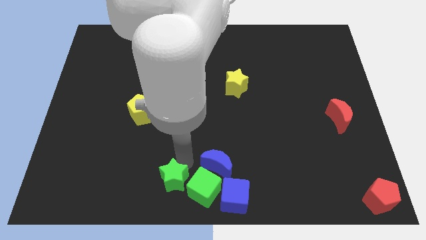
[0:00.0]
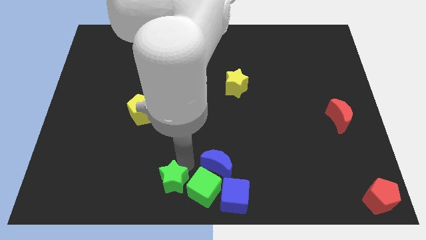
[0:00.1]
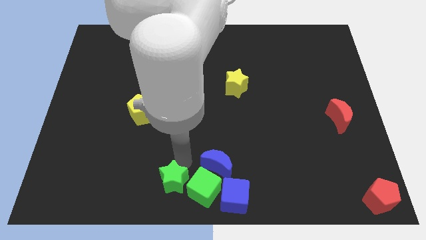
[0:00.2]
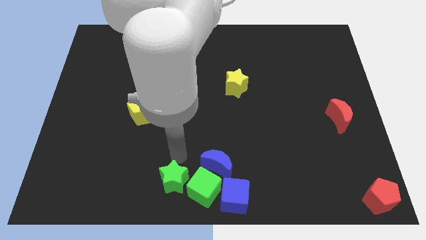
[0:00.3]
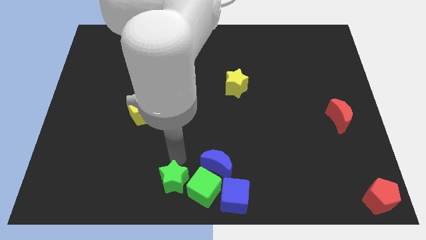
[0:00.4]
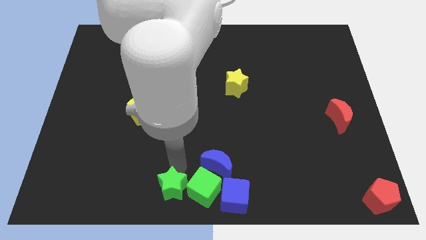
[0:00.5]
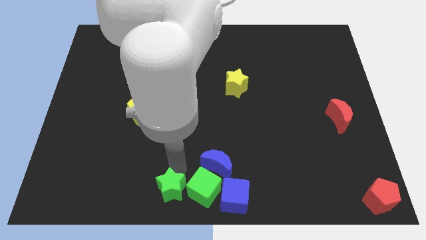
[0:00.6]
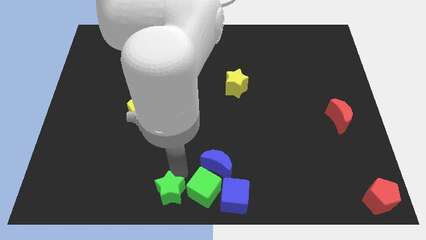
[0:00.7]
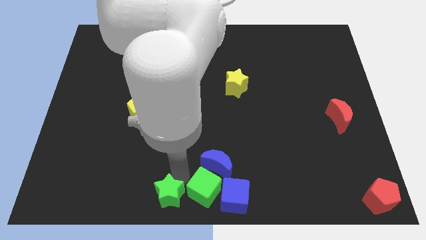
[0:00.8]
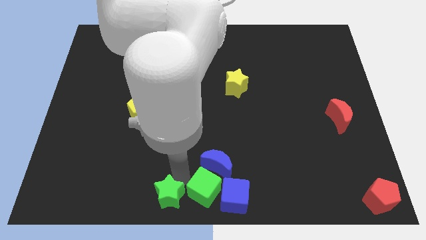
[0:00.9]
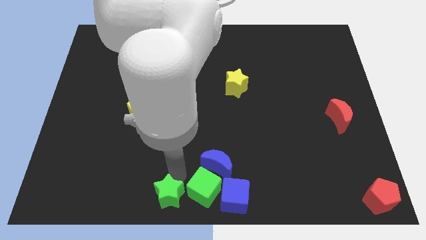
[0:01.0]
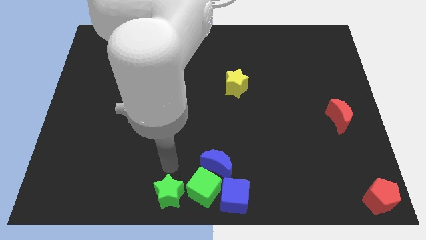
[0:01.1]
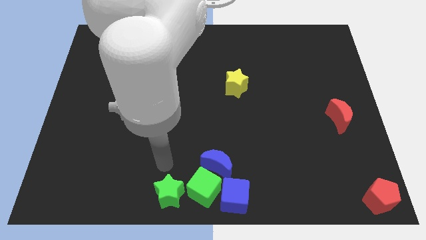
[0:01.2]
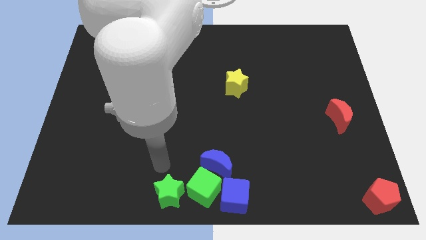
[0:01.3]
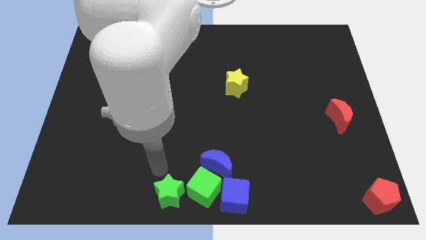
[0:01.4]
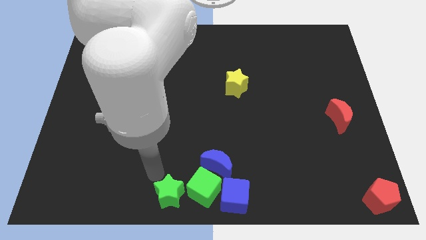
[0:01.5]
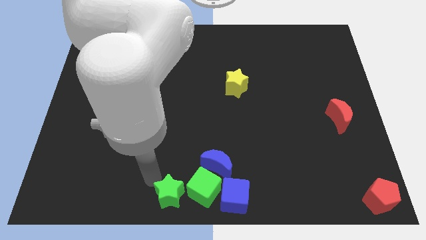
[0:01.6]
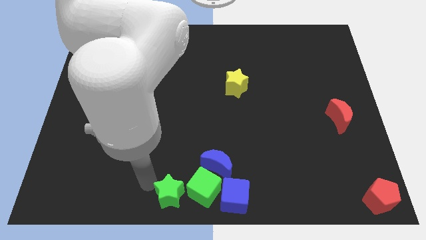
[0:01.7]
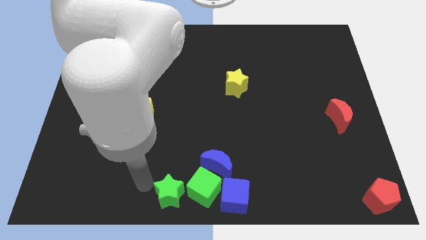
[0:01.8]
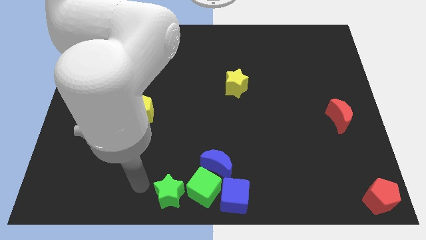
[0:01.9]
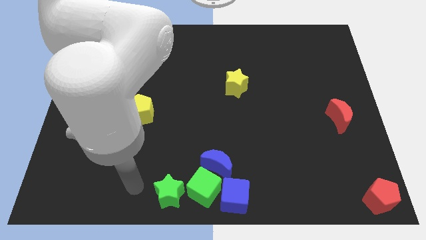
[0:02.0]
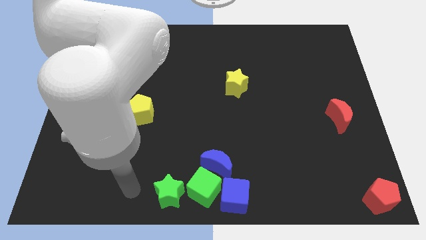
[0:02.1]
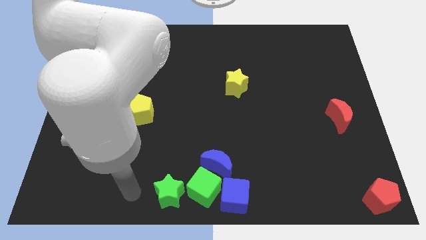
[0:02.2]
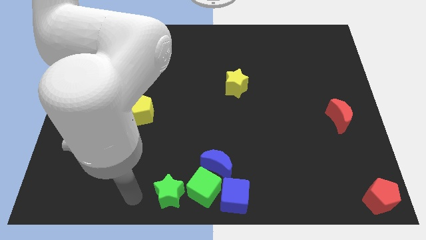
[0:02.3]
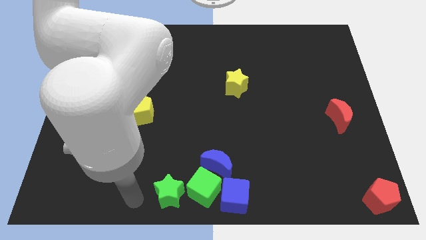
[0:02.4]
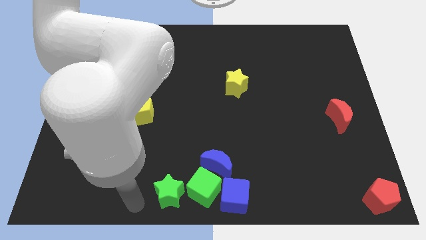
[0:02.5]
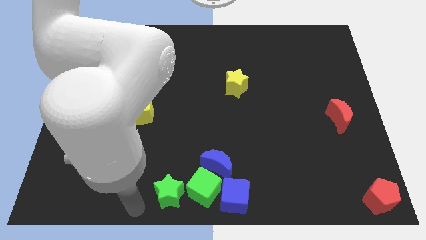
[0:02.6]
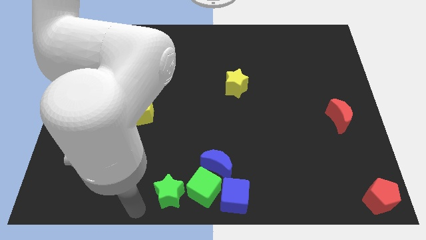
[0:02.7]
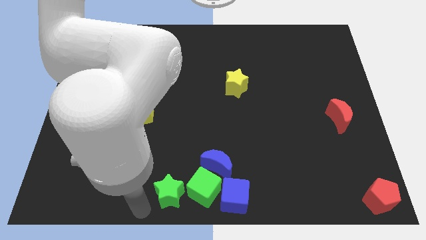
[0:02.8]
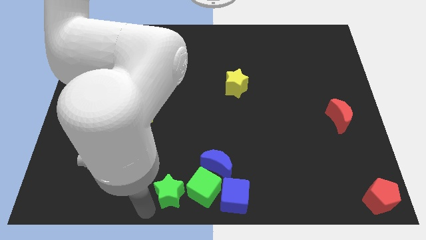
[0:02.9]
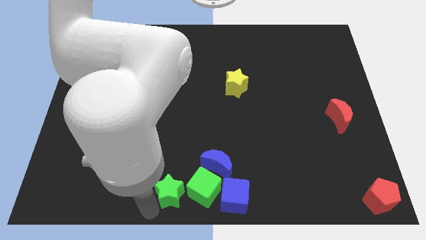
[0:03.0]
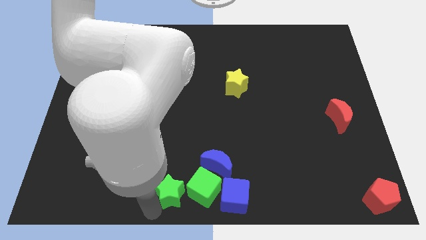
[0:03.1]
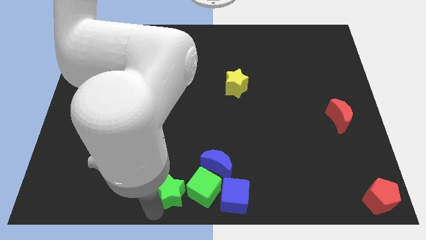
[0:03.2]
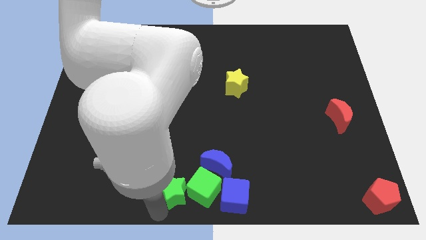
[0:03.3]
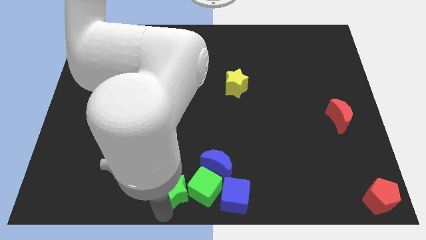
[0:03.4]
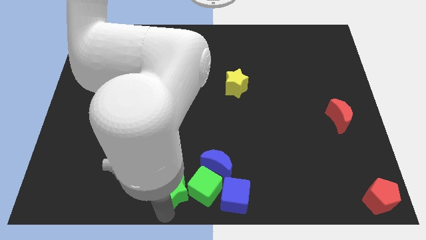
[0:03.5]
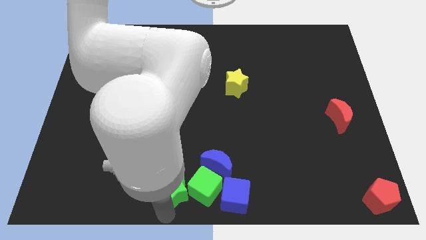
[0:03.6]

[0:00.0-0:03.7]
drag the star into the left side of teh green cube

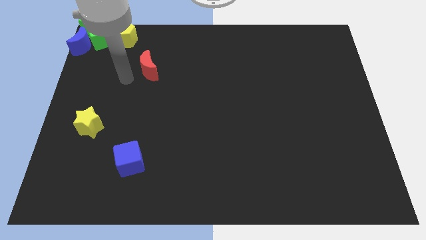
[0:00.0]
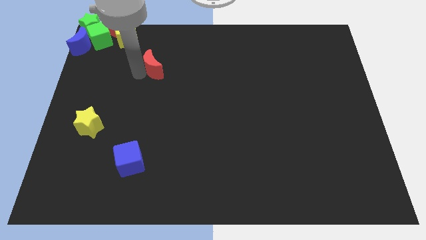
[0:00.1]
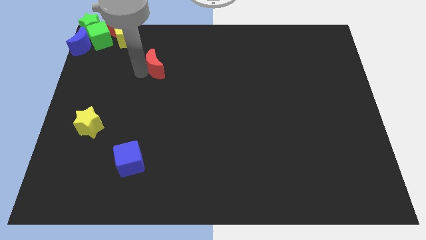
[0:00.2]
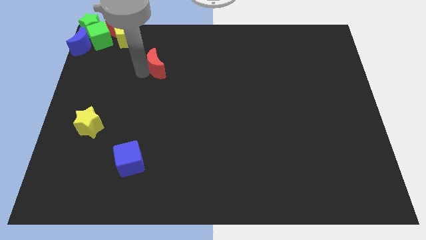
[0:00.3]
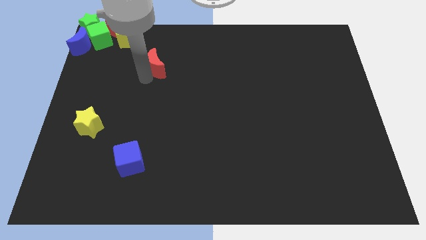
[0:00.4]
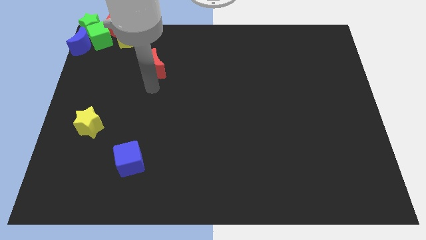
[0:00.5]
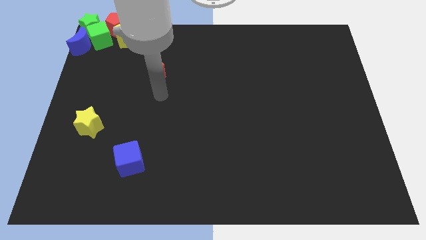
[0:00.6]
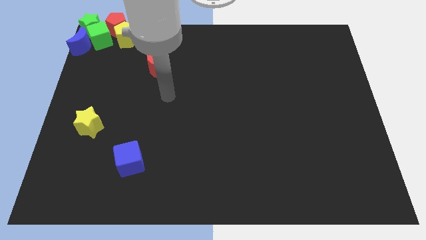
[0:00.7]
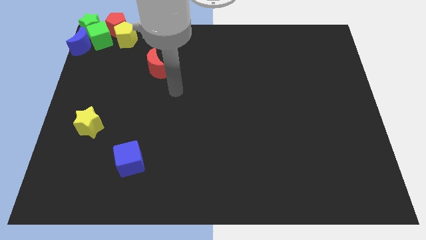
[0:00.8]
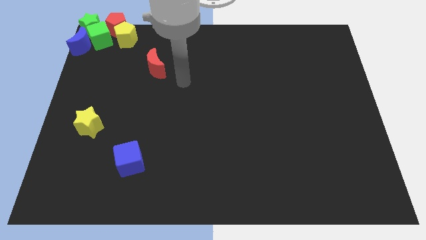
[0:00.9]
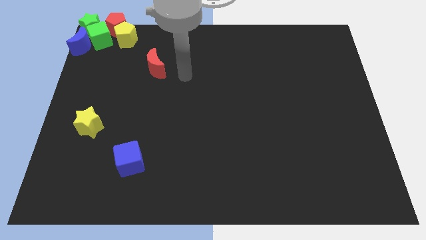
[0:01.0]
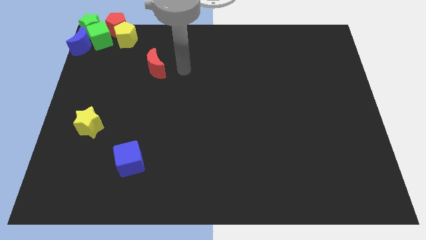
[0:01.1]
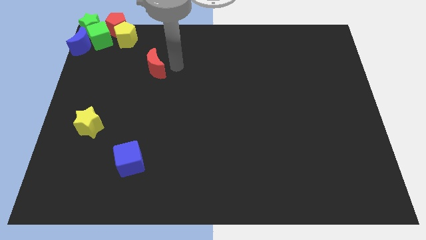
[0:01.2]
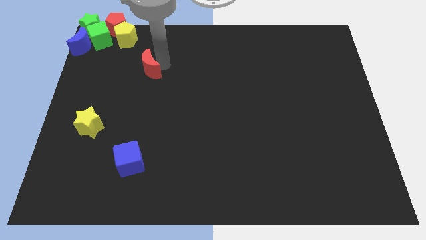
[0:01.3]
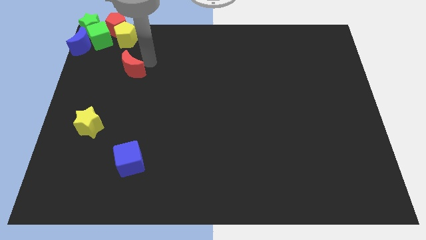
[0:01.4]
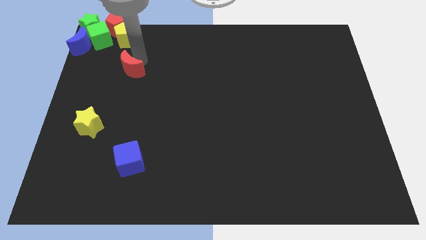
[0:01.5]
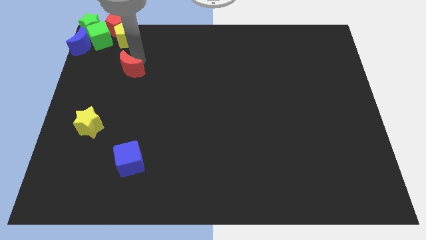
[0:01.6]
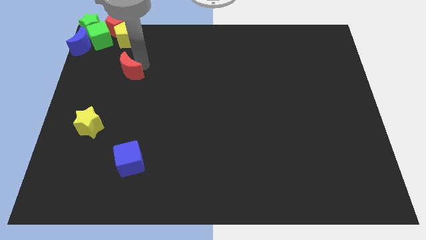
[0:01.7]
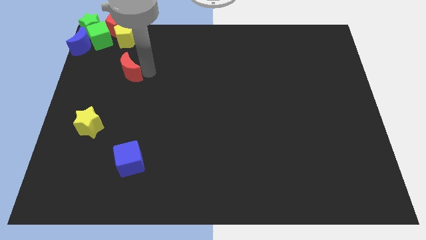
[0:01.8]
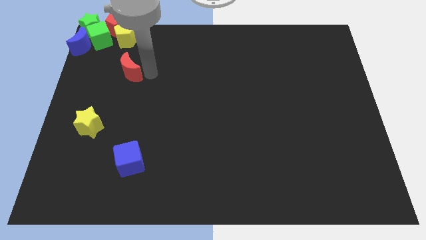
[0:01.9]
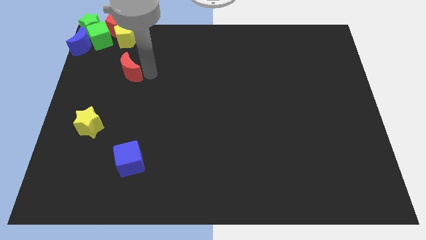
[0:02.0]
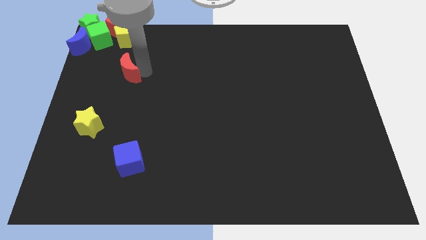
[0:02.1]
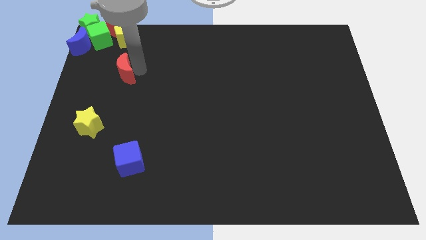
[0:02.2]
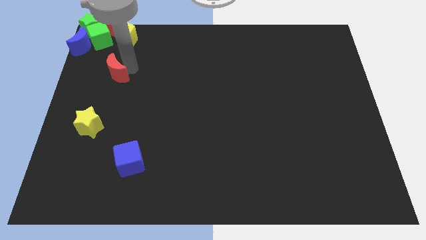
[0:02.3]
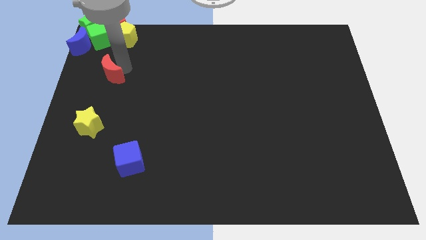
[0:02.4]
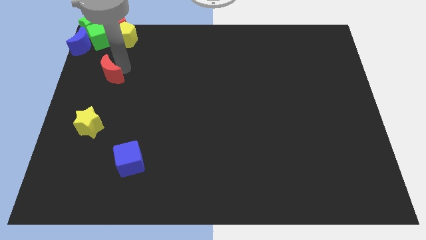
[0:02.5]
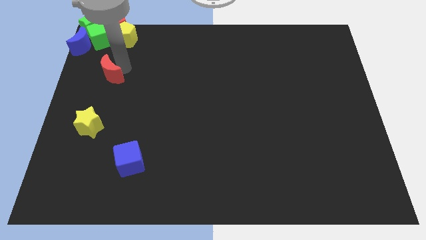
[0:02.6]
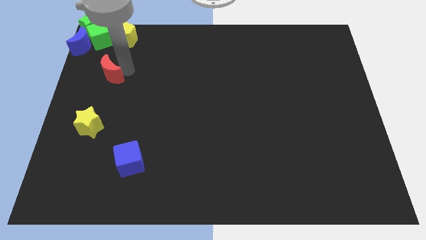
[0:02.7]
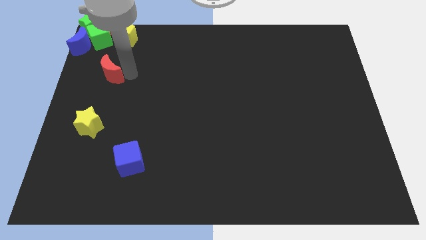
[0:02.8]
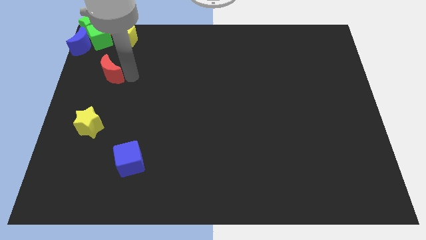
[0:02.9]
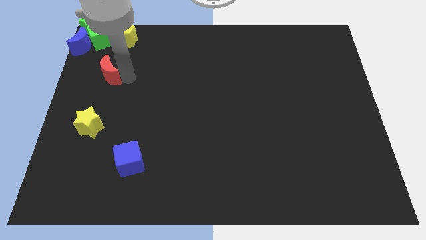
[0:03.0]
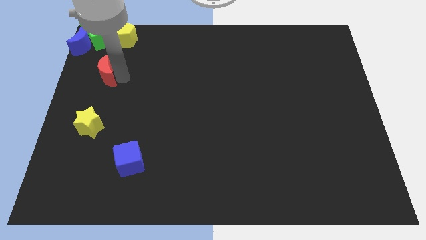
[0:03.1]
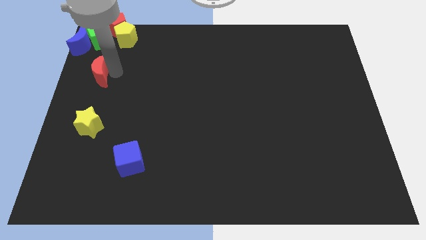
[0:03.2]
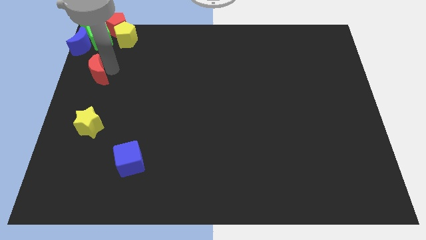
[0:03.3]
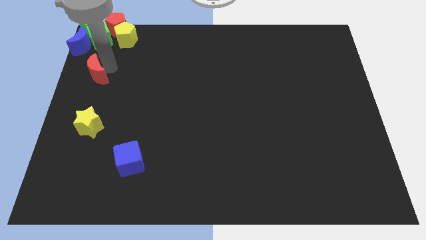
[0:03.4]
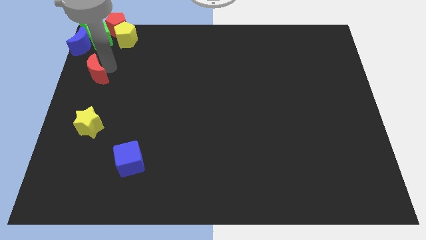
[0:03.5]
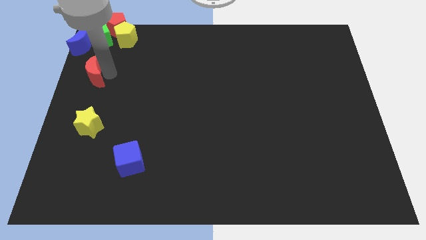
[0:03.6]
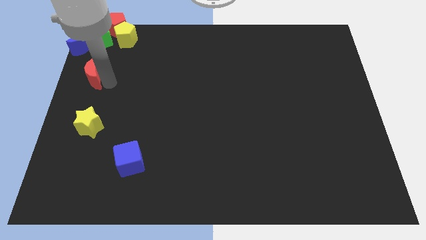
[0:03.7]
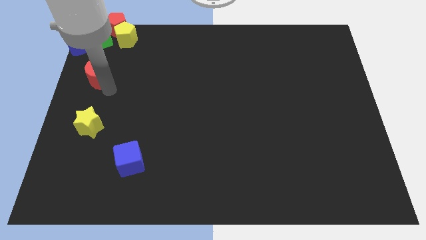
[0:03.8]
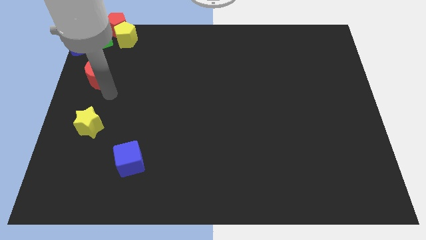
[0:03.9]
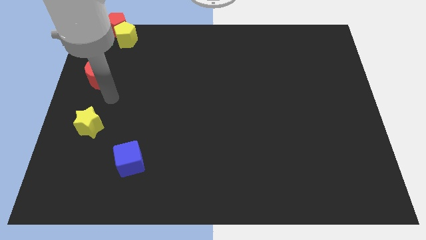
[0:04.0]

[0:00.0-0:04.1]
slide the red moon diagonally bottom left to the yellow pentagon

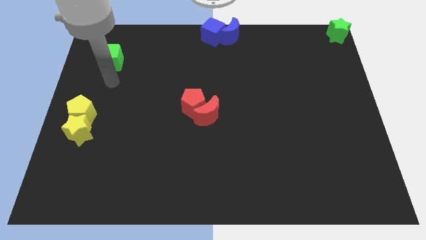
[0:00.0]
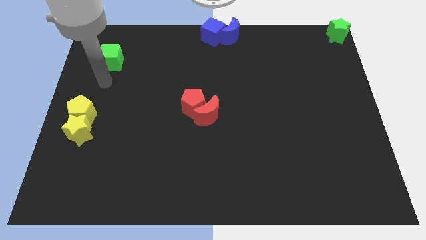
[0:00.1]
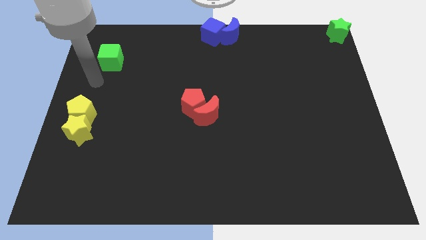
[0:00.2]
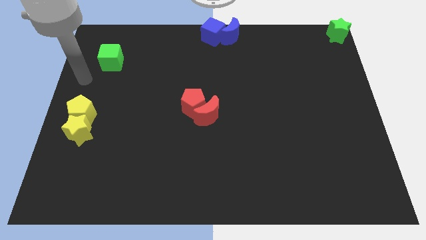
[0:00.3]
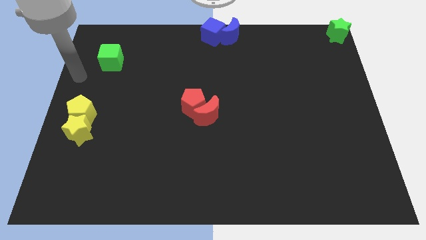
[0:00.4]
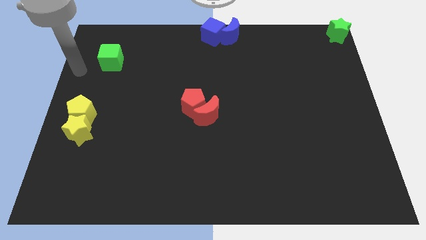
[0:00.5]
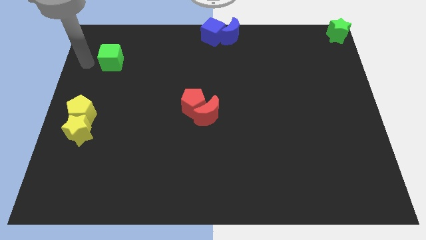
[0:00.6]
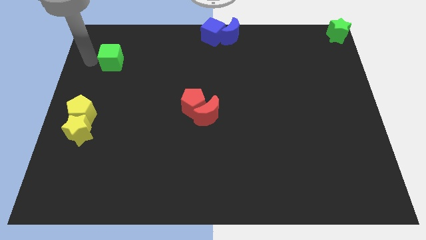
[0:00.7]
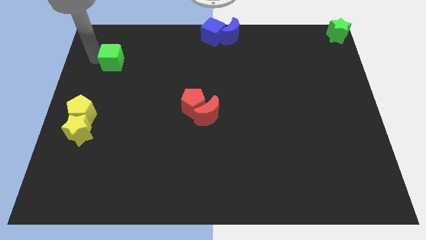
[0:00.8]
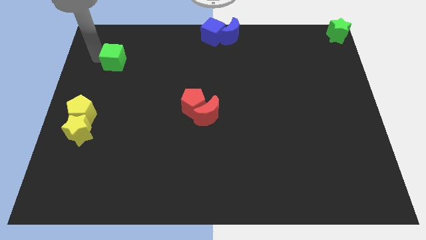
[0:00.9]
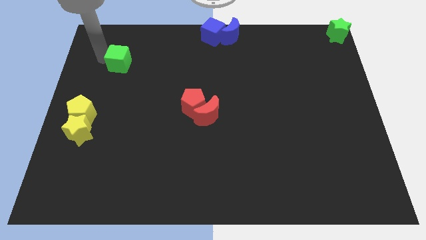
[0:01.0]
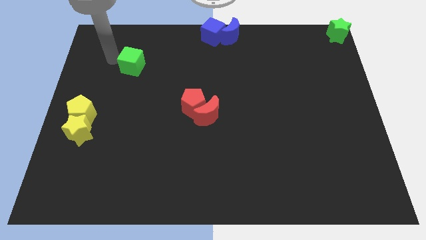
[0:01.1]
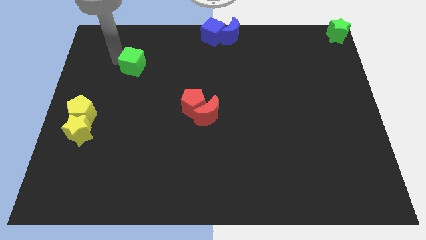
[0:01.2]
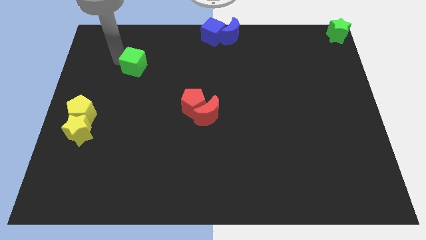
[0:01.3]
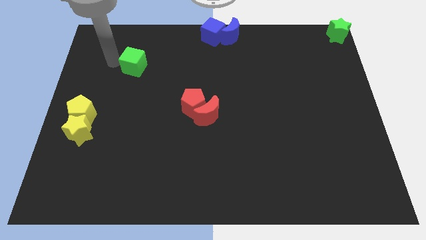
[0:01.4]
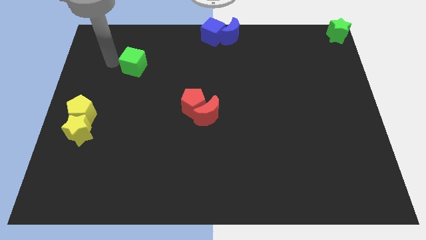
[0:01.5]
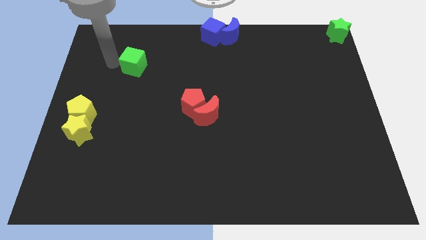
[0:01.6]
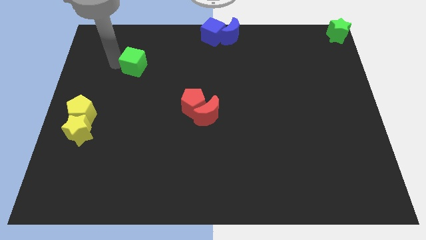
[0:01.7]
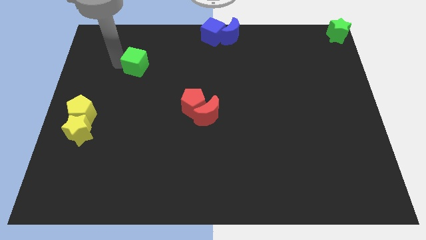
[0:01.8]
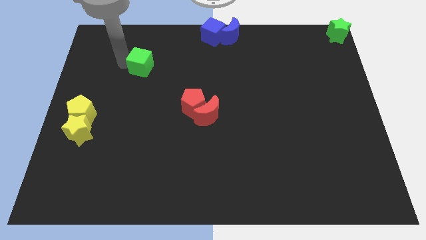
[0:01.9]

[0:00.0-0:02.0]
slightly move the arm towards the right
